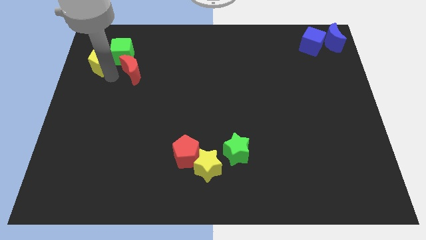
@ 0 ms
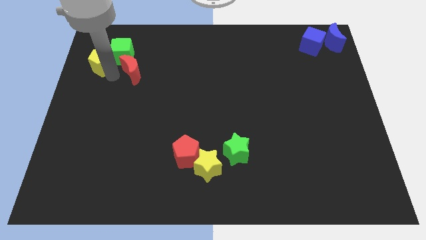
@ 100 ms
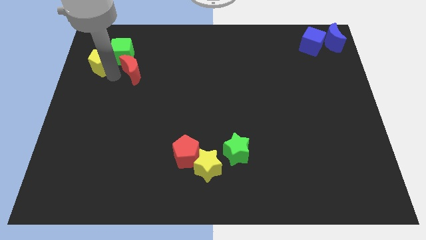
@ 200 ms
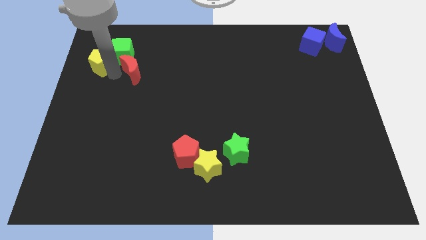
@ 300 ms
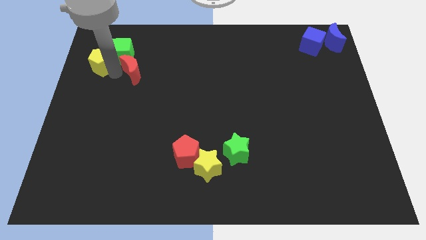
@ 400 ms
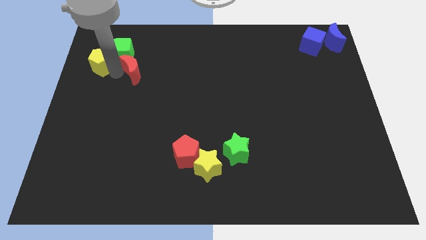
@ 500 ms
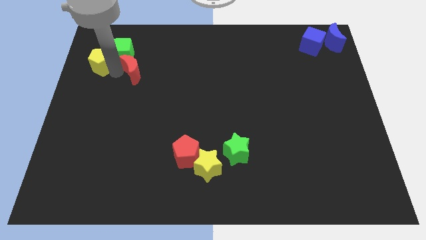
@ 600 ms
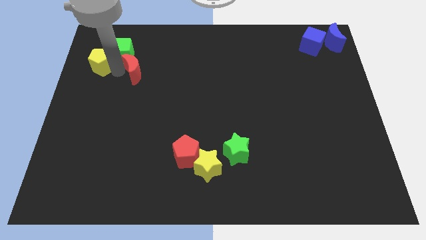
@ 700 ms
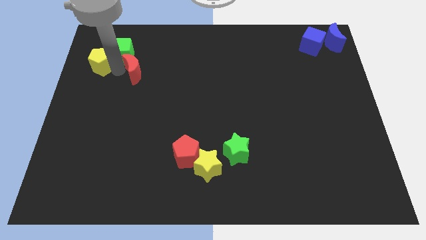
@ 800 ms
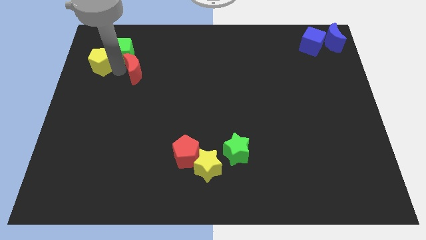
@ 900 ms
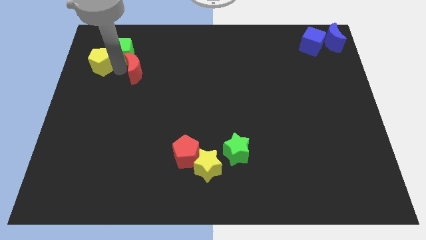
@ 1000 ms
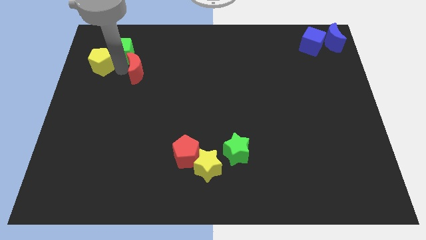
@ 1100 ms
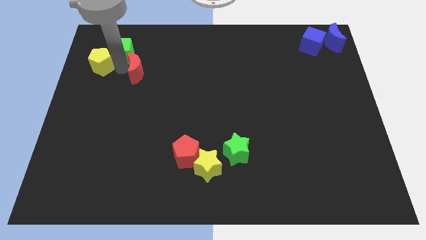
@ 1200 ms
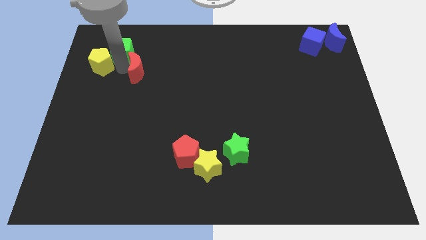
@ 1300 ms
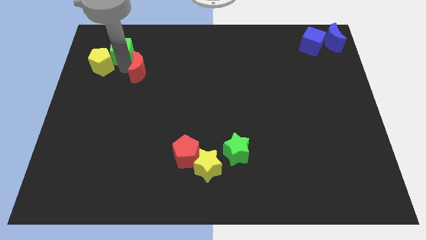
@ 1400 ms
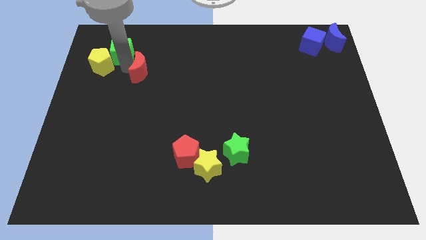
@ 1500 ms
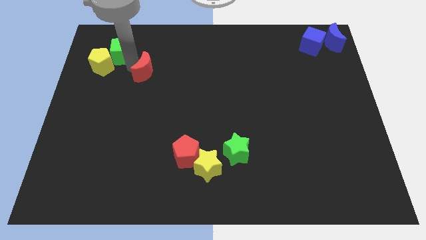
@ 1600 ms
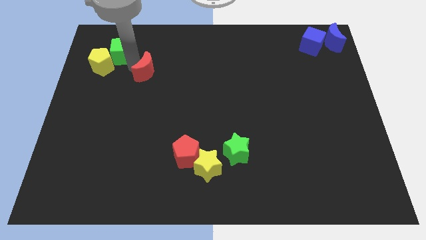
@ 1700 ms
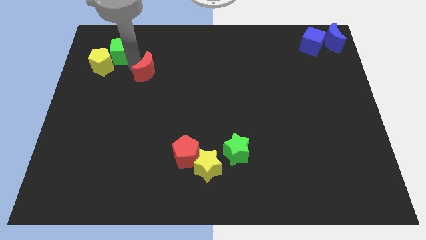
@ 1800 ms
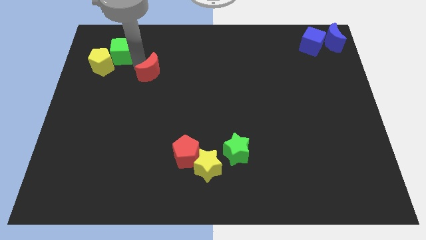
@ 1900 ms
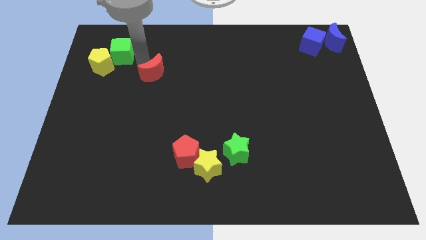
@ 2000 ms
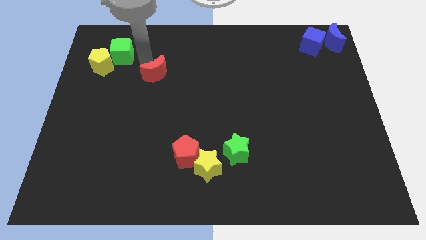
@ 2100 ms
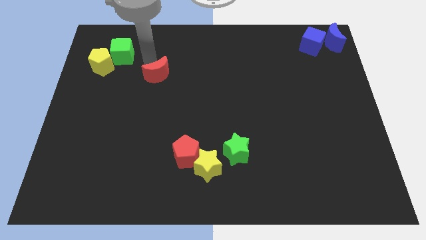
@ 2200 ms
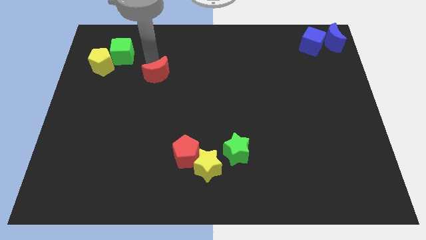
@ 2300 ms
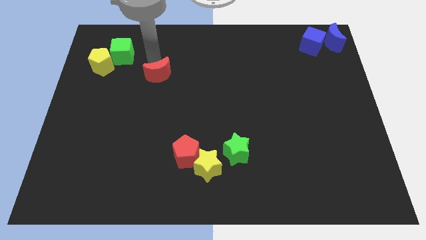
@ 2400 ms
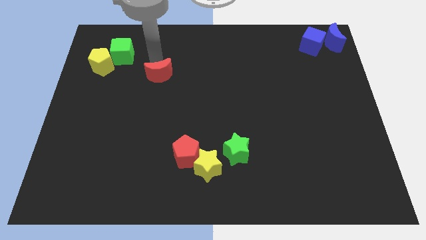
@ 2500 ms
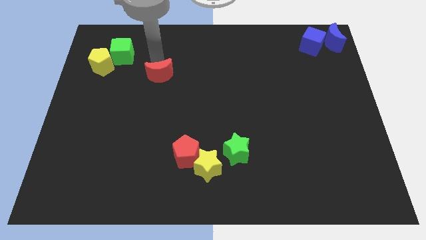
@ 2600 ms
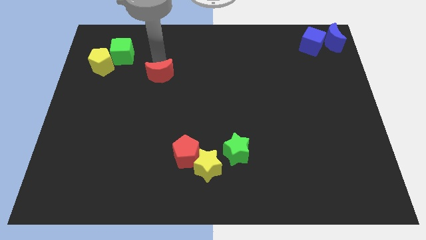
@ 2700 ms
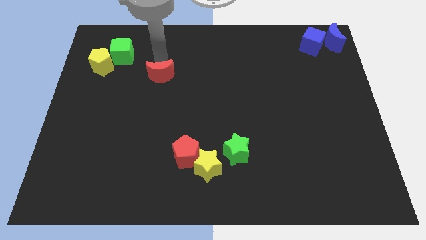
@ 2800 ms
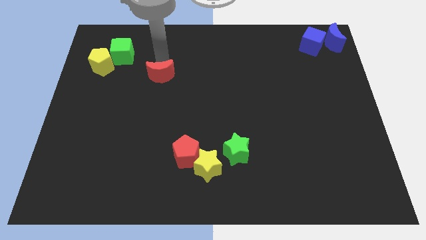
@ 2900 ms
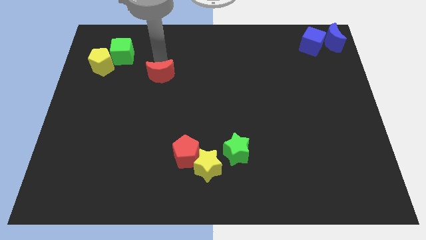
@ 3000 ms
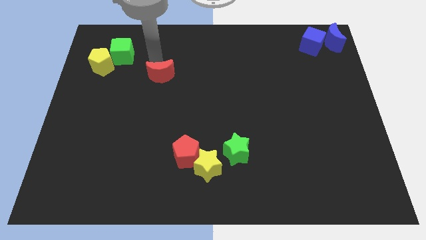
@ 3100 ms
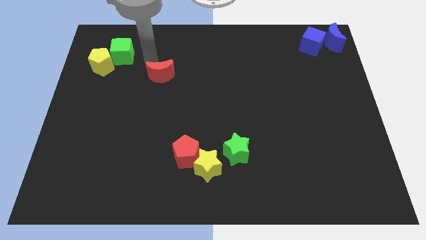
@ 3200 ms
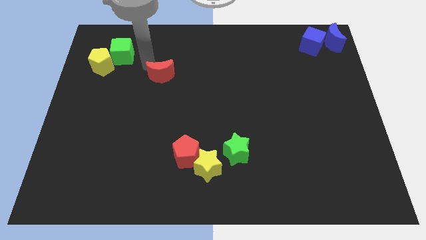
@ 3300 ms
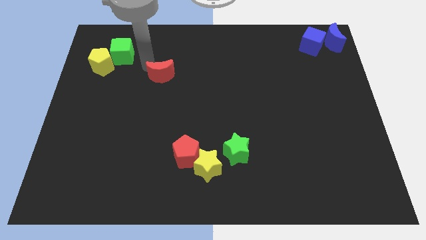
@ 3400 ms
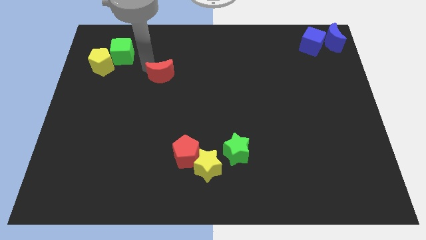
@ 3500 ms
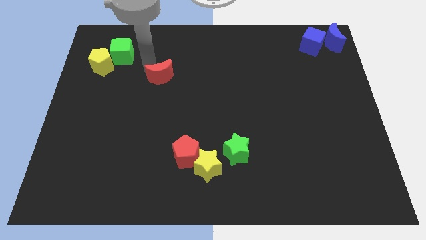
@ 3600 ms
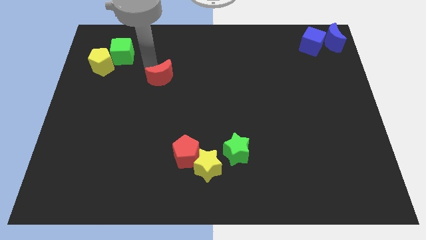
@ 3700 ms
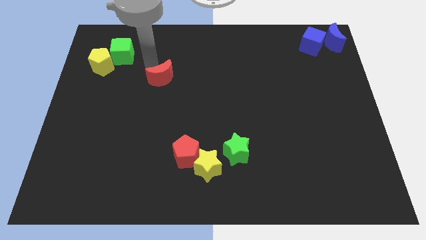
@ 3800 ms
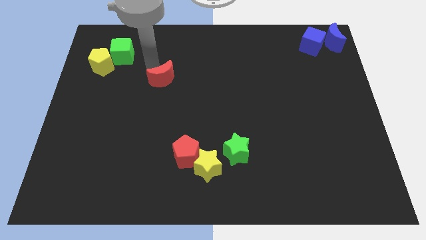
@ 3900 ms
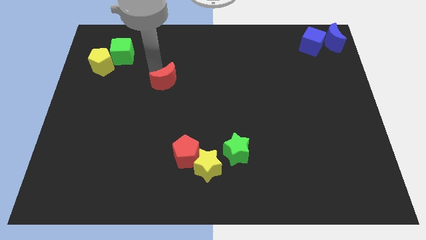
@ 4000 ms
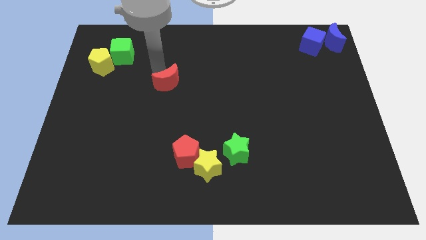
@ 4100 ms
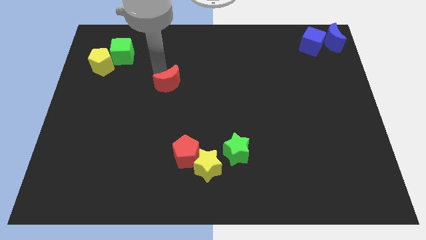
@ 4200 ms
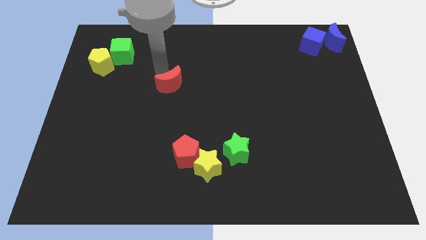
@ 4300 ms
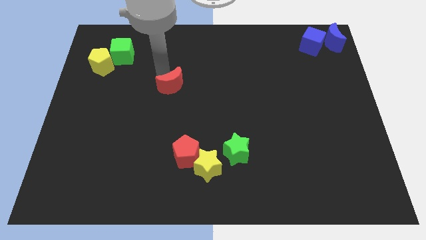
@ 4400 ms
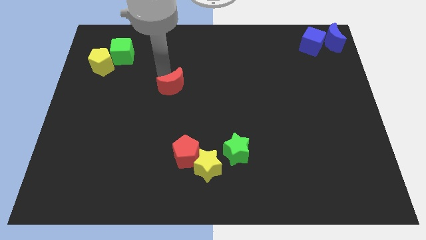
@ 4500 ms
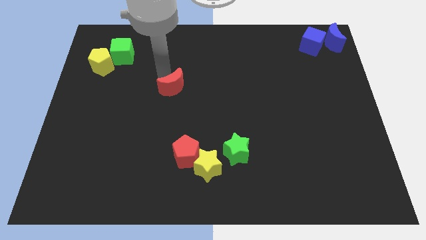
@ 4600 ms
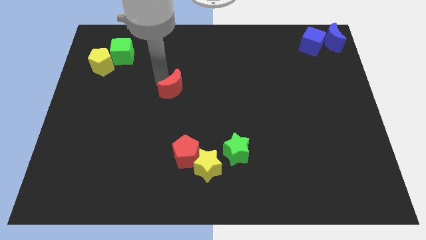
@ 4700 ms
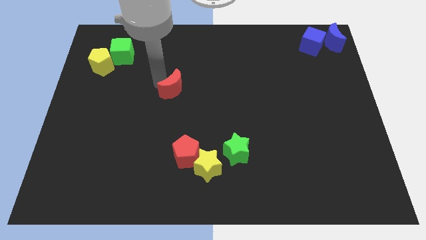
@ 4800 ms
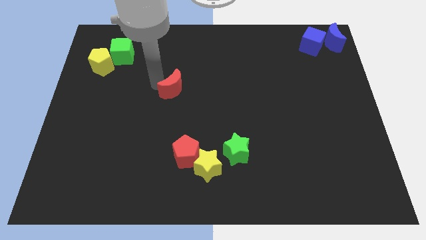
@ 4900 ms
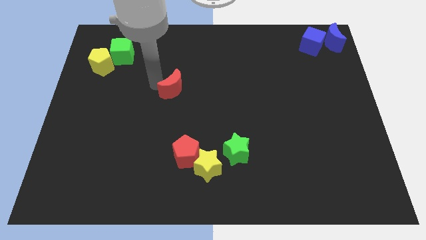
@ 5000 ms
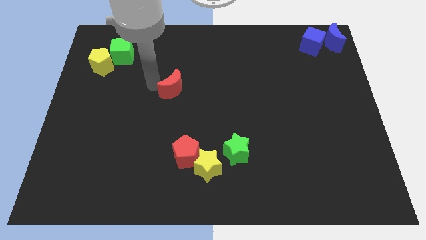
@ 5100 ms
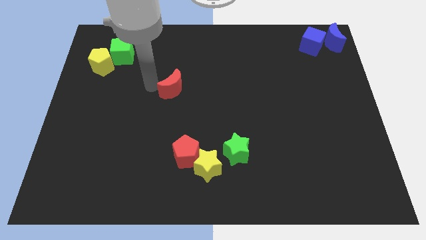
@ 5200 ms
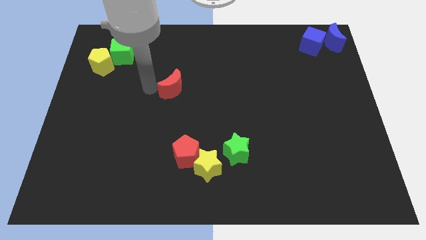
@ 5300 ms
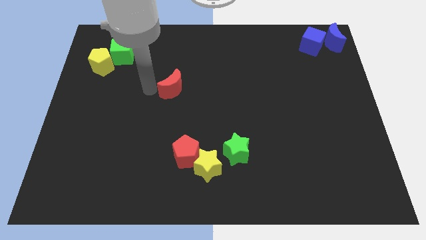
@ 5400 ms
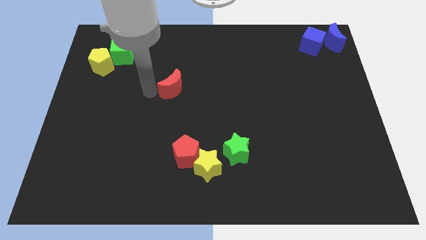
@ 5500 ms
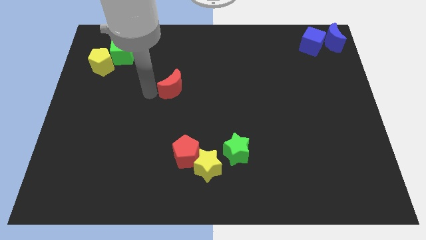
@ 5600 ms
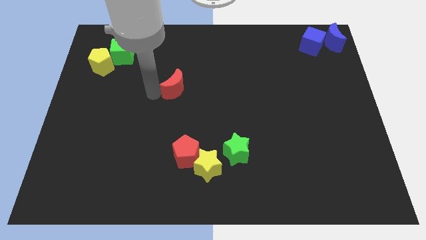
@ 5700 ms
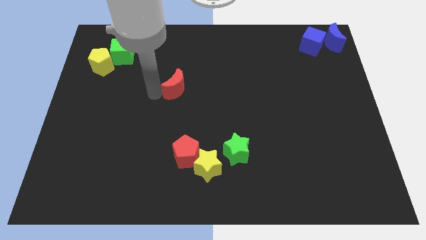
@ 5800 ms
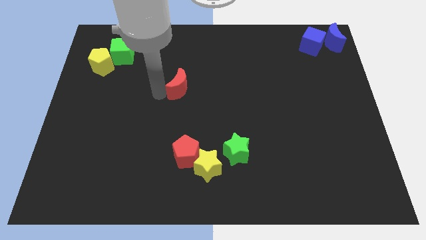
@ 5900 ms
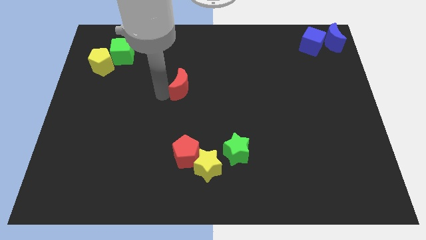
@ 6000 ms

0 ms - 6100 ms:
separate red moon from green cube

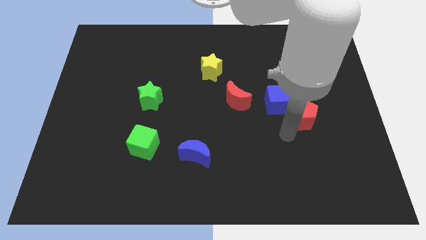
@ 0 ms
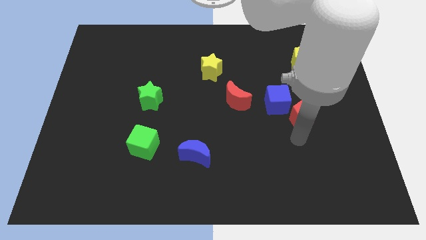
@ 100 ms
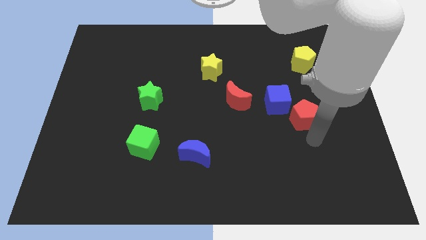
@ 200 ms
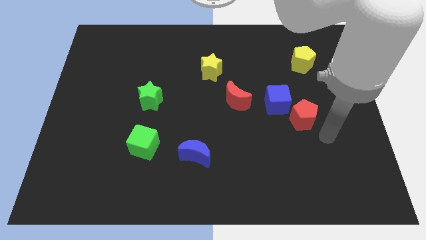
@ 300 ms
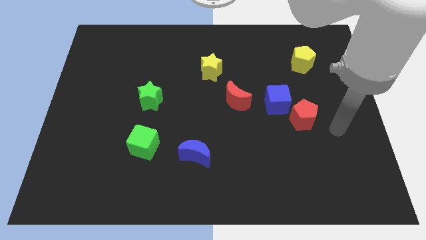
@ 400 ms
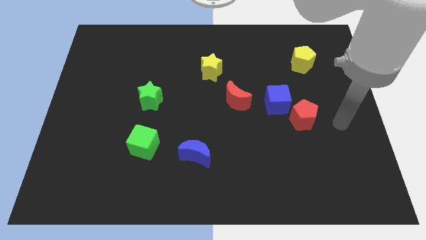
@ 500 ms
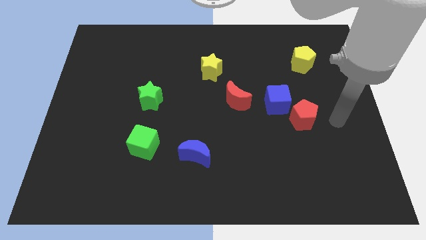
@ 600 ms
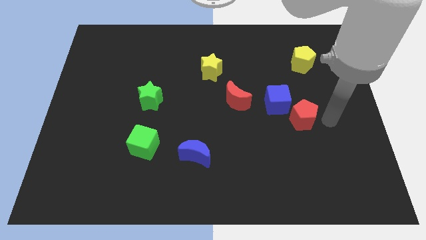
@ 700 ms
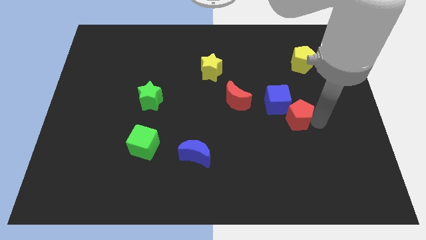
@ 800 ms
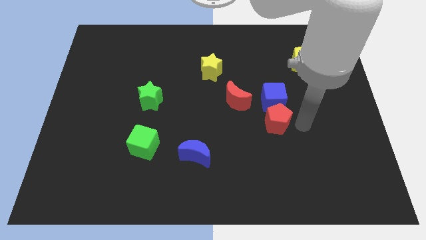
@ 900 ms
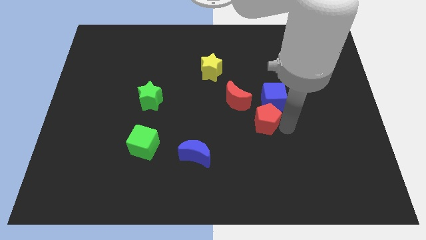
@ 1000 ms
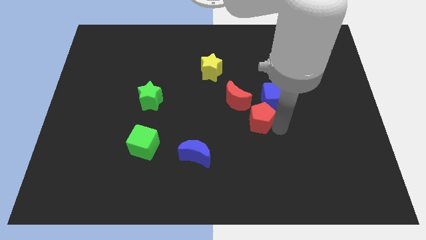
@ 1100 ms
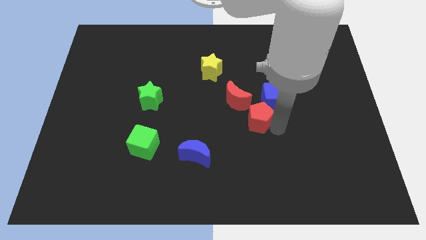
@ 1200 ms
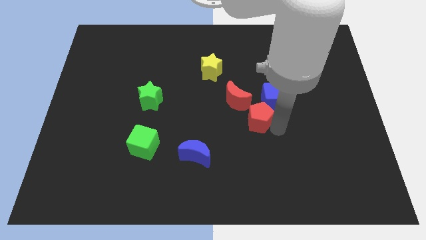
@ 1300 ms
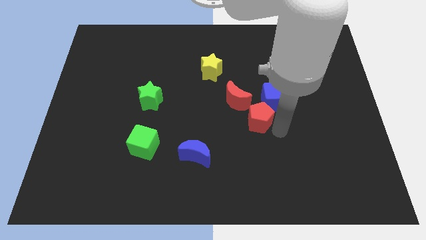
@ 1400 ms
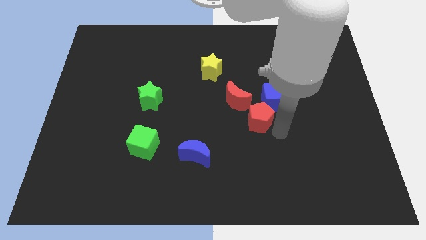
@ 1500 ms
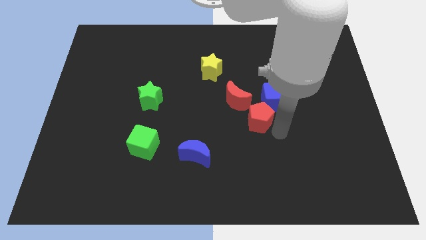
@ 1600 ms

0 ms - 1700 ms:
push the red penatgon diagonally to the bottom right of the red moon

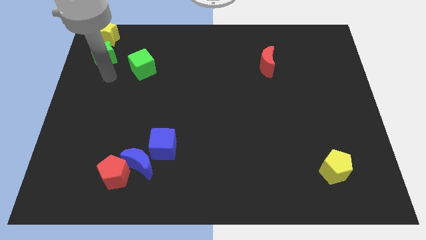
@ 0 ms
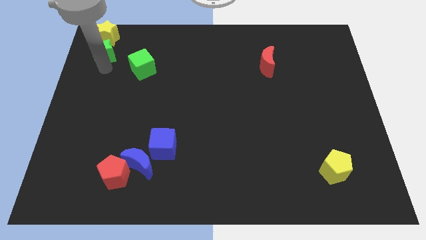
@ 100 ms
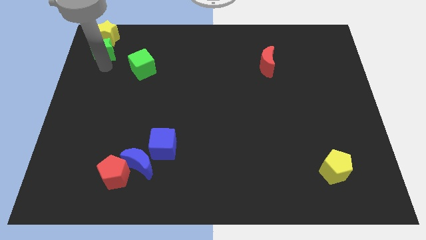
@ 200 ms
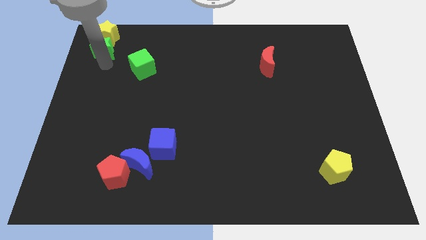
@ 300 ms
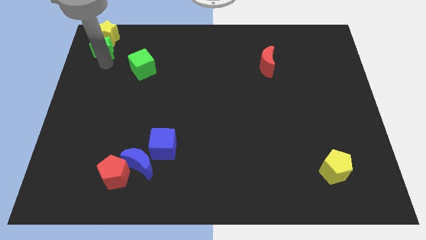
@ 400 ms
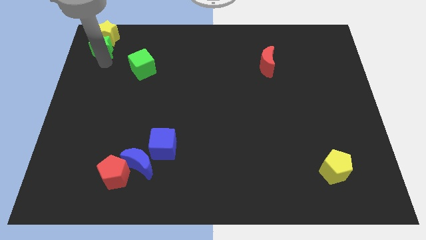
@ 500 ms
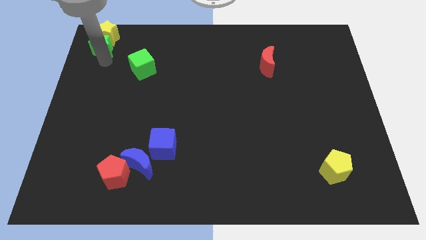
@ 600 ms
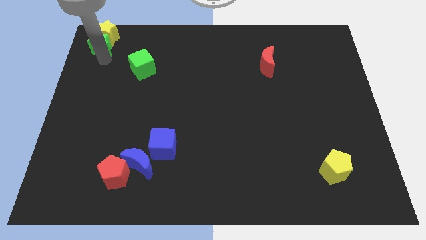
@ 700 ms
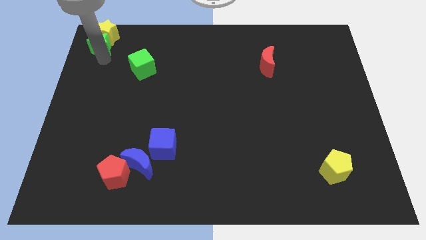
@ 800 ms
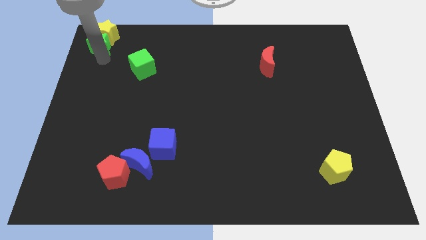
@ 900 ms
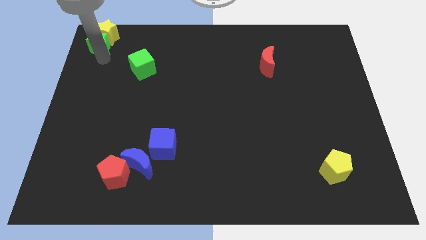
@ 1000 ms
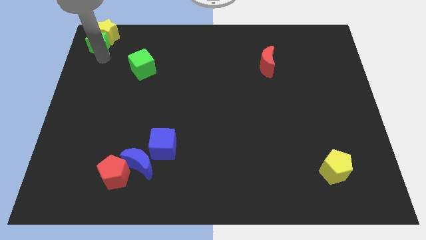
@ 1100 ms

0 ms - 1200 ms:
move the green star into yellow star

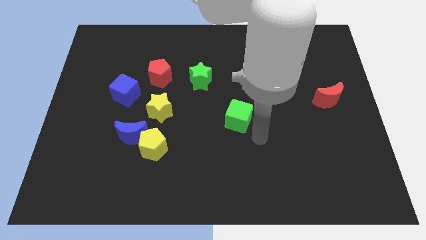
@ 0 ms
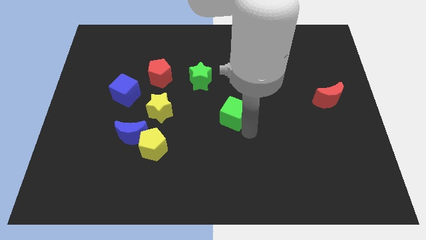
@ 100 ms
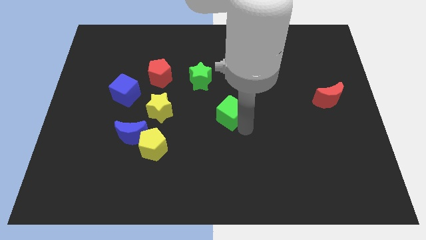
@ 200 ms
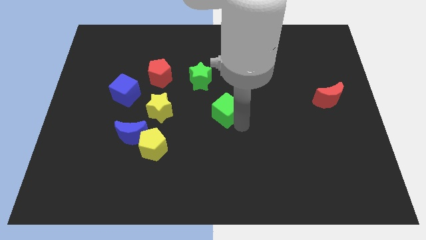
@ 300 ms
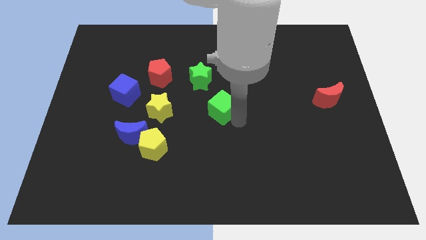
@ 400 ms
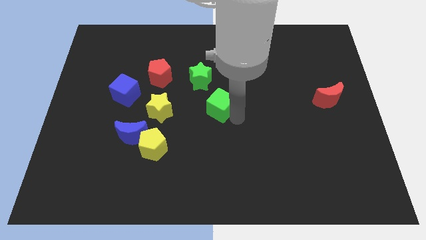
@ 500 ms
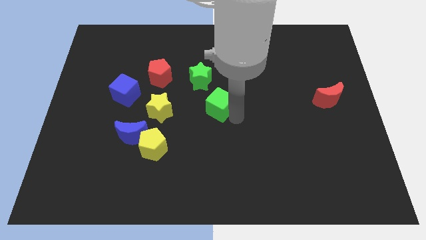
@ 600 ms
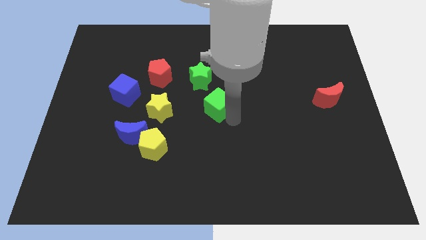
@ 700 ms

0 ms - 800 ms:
place the green cube right to the yellow star
